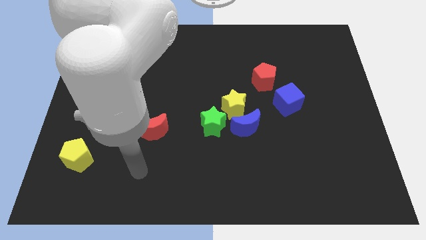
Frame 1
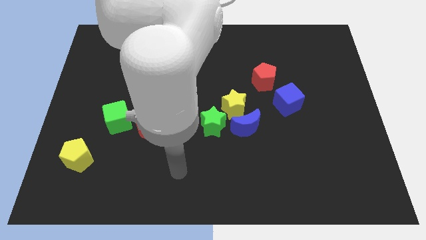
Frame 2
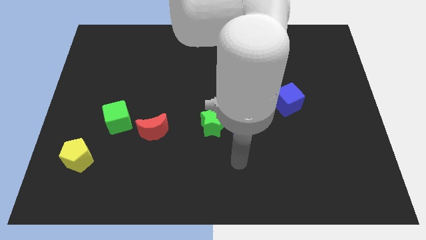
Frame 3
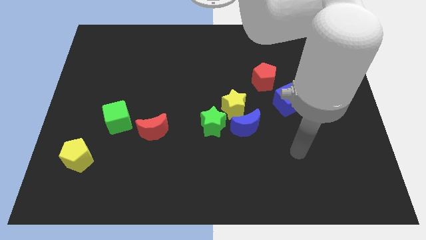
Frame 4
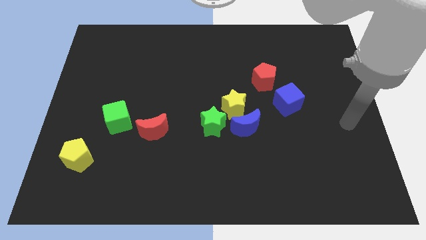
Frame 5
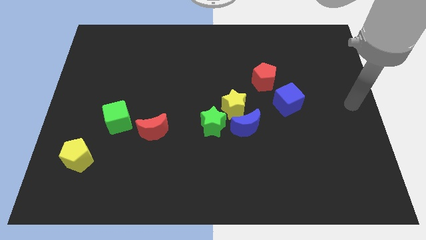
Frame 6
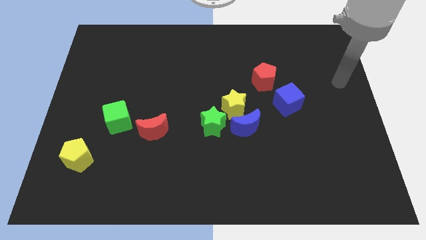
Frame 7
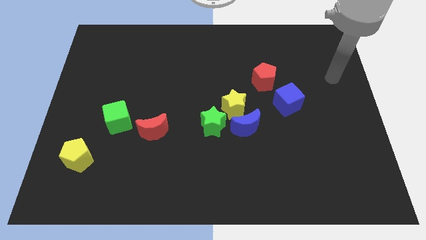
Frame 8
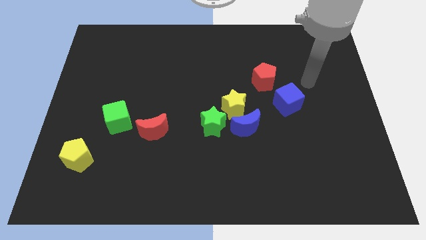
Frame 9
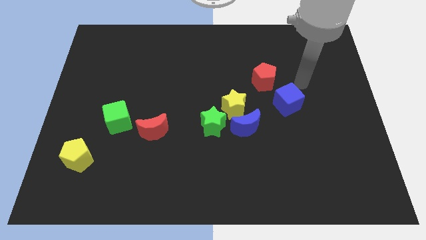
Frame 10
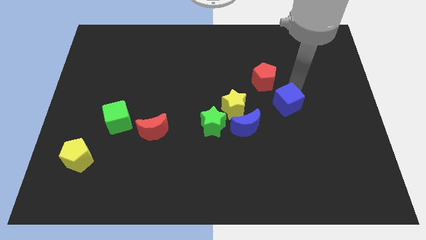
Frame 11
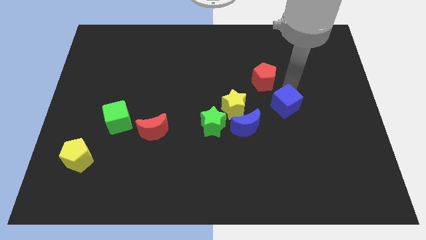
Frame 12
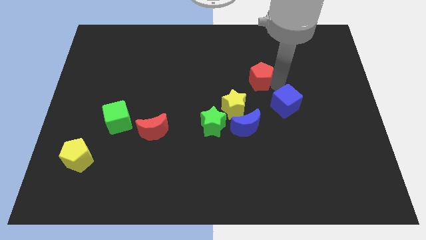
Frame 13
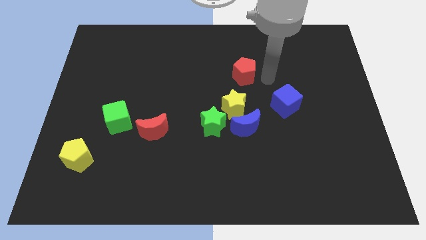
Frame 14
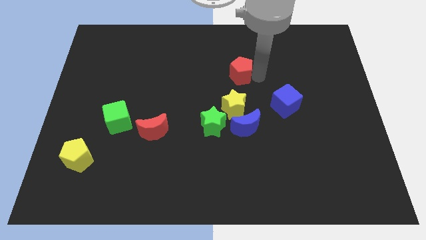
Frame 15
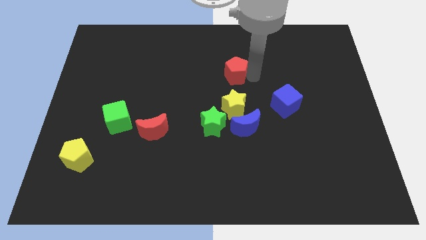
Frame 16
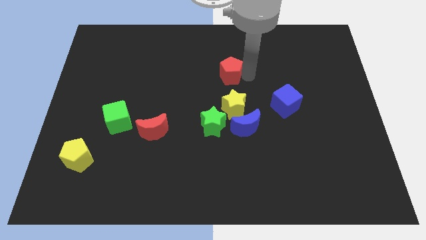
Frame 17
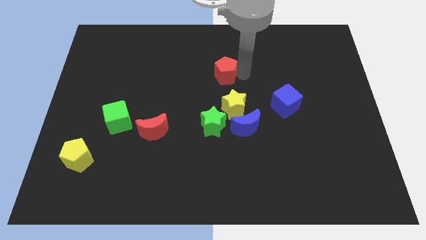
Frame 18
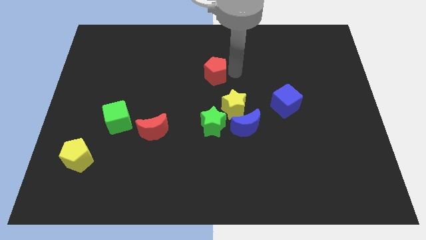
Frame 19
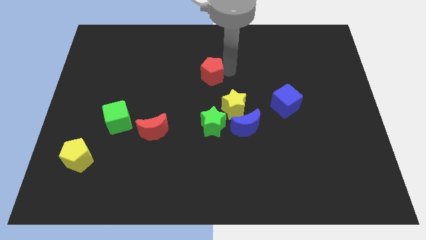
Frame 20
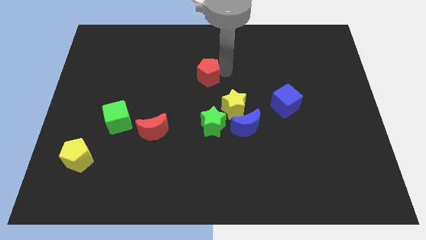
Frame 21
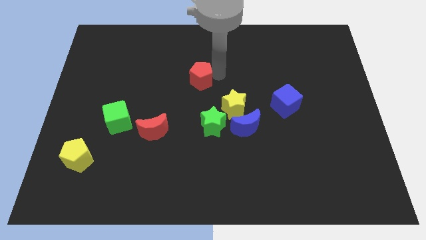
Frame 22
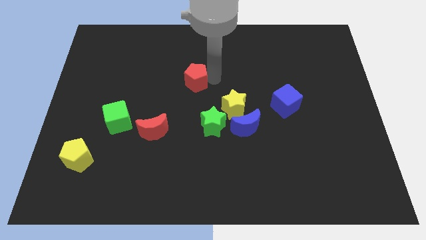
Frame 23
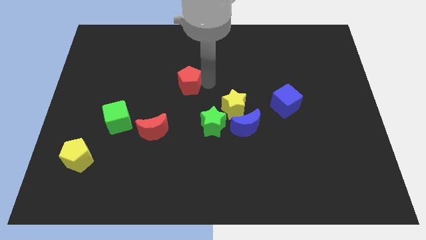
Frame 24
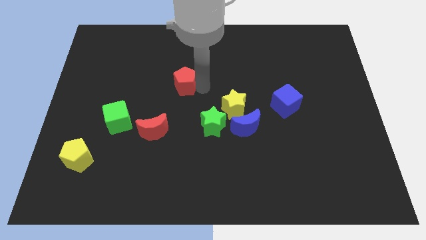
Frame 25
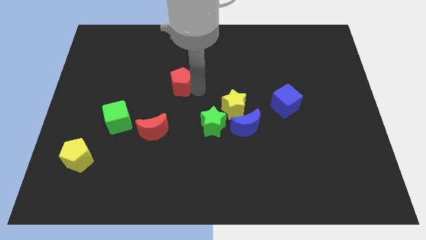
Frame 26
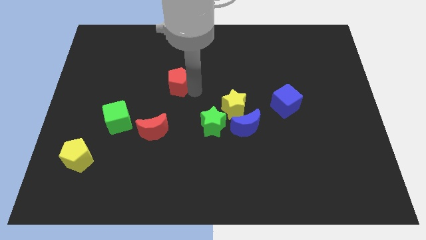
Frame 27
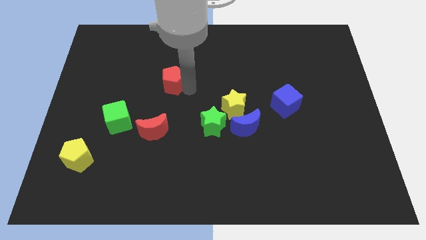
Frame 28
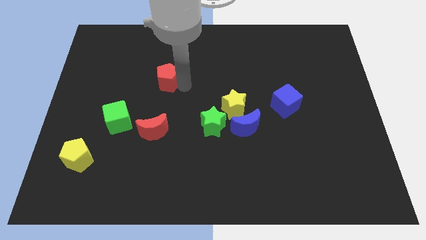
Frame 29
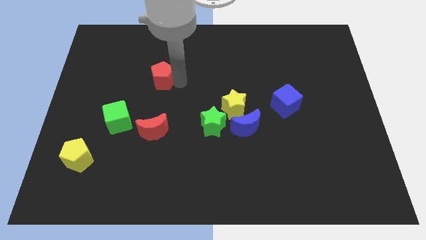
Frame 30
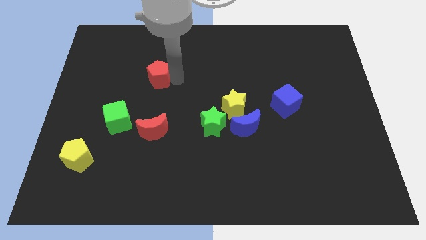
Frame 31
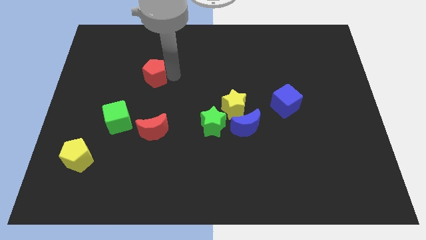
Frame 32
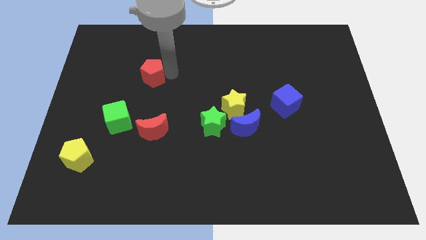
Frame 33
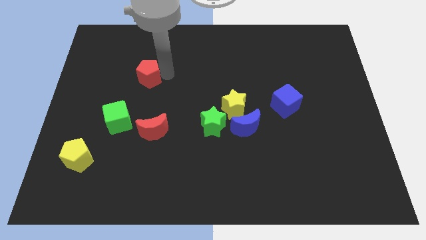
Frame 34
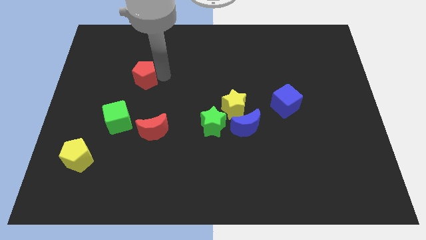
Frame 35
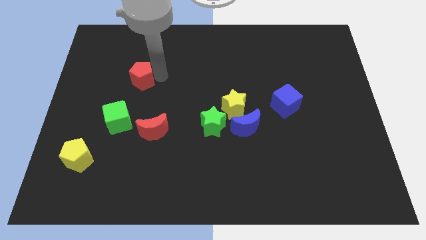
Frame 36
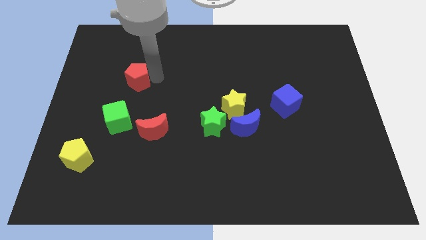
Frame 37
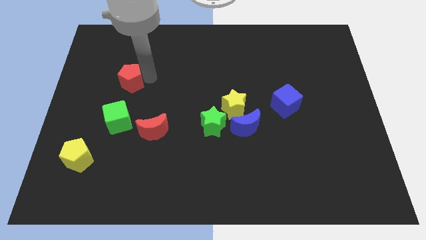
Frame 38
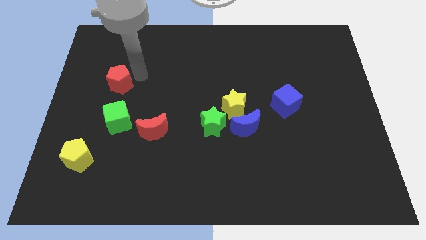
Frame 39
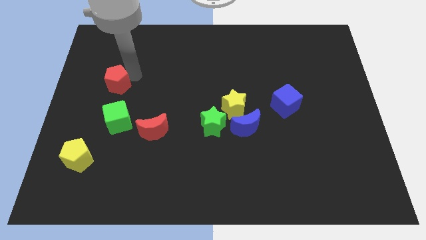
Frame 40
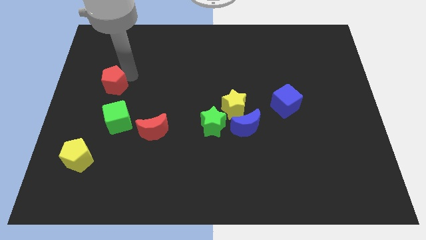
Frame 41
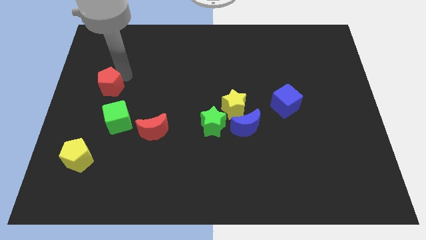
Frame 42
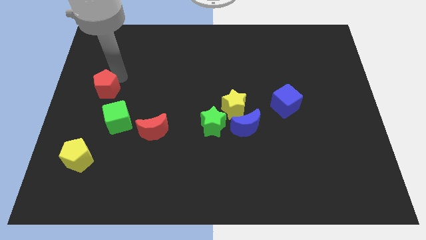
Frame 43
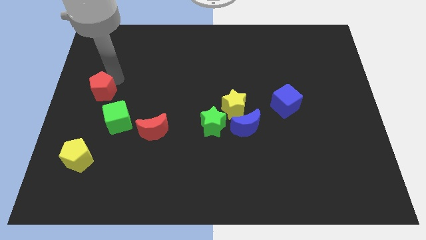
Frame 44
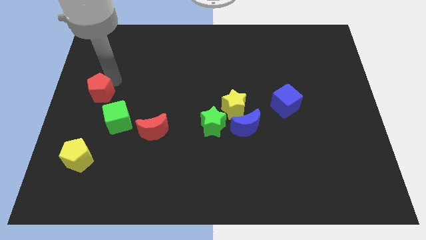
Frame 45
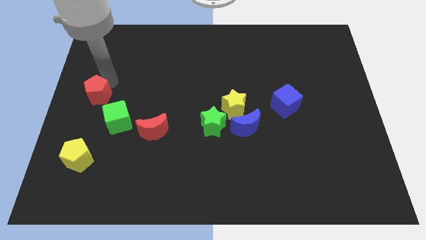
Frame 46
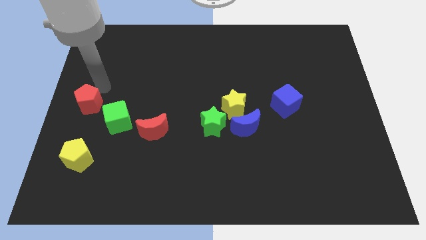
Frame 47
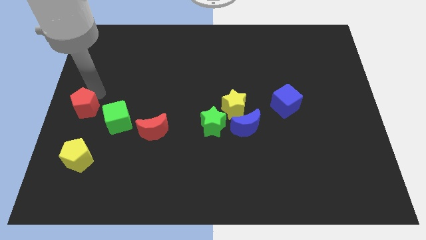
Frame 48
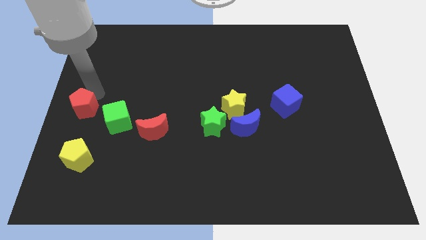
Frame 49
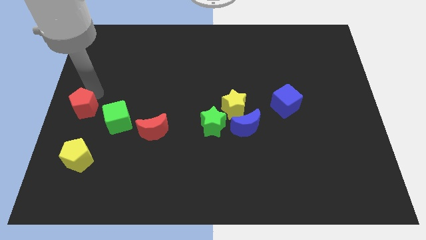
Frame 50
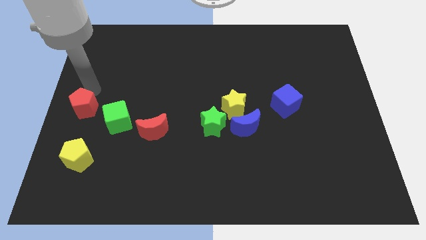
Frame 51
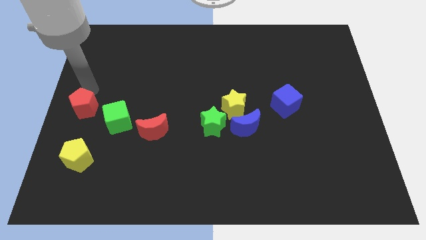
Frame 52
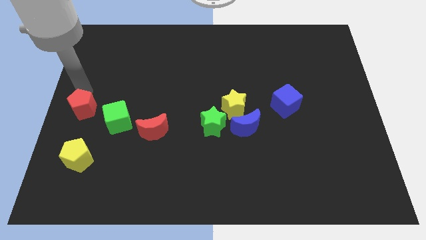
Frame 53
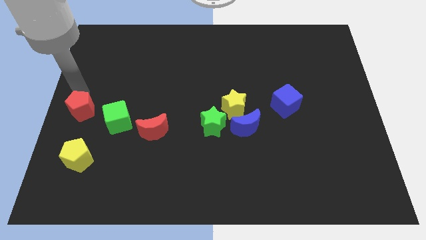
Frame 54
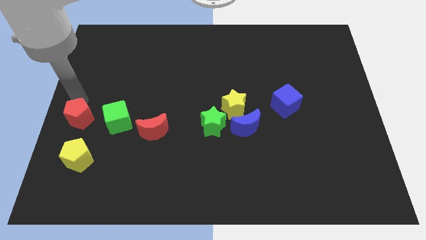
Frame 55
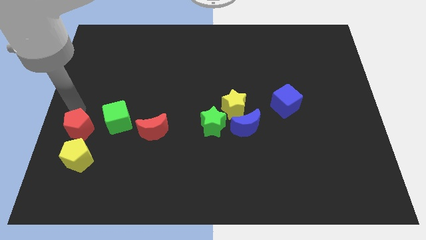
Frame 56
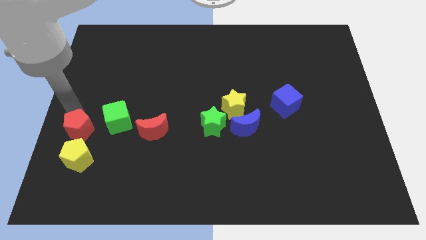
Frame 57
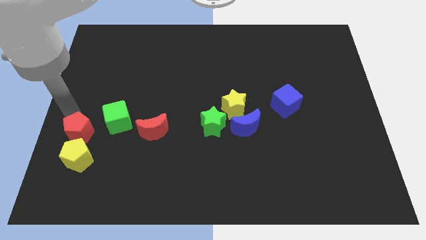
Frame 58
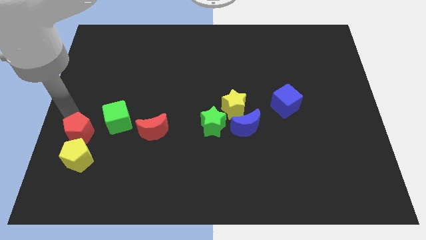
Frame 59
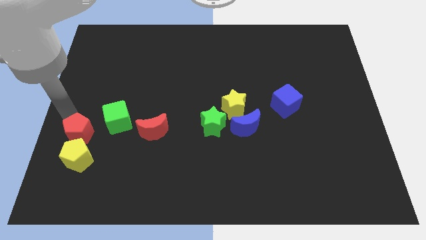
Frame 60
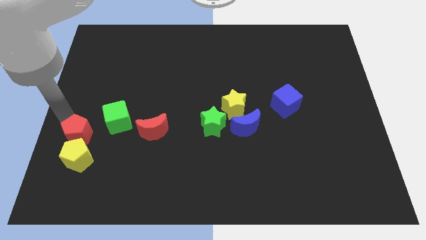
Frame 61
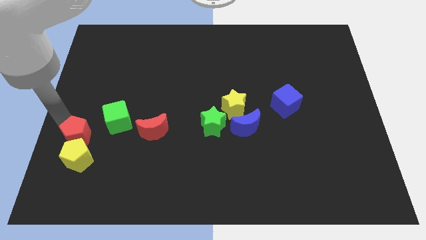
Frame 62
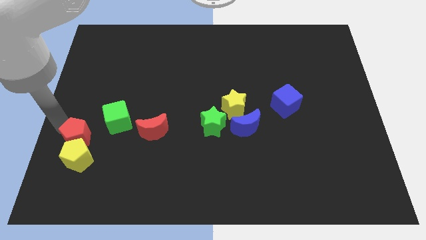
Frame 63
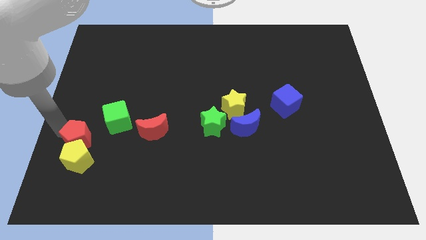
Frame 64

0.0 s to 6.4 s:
move the red pentagon close to the yellow pentagon

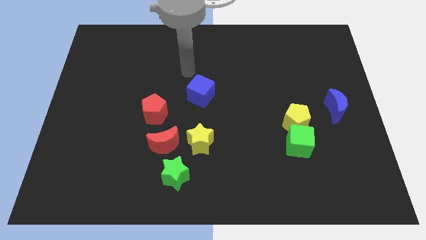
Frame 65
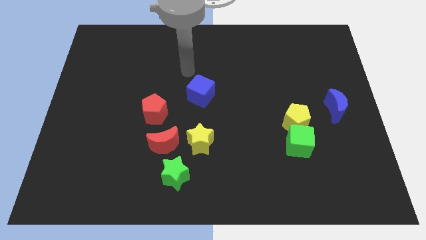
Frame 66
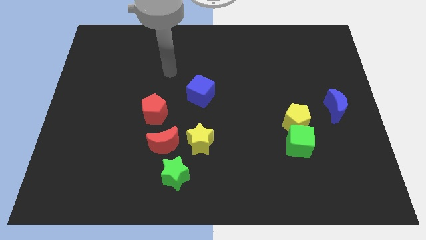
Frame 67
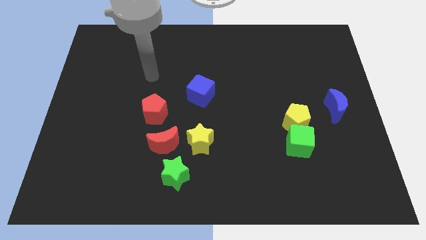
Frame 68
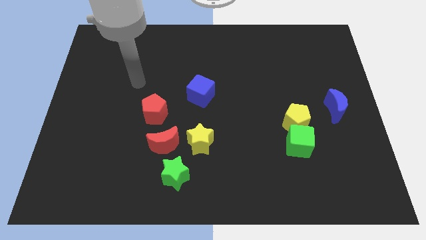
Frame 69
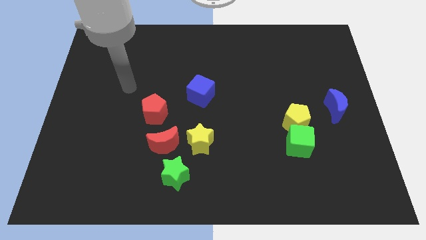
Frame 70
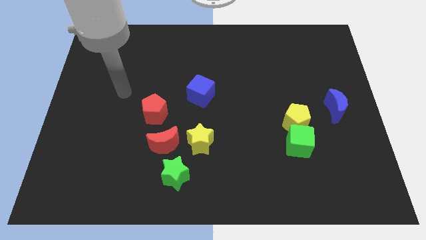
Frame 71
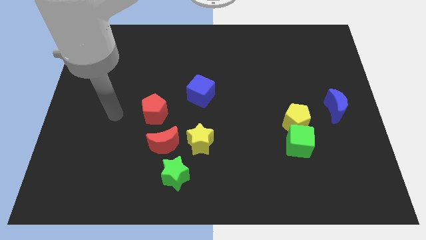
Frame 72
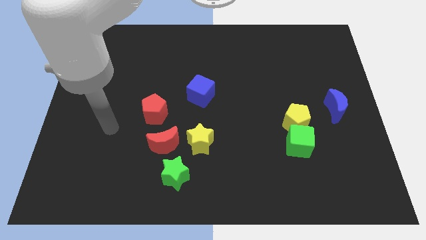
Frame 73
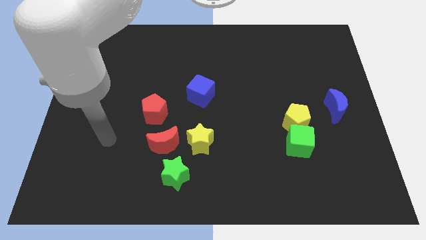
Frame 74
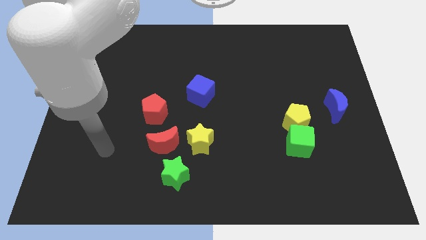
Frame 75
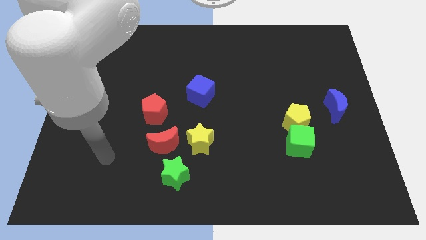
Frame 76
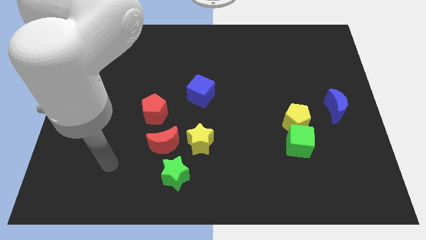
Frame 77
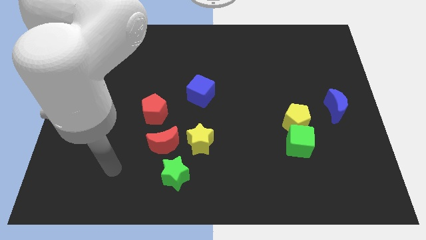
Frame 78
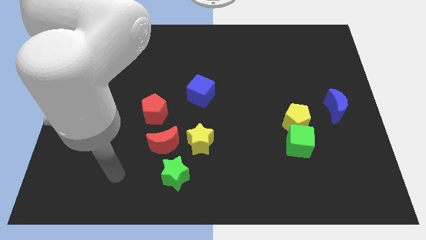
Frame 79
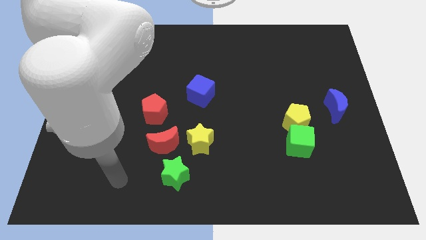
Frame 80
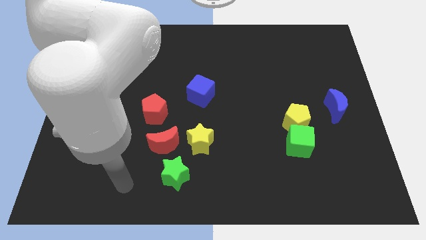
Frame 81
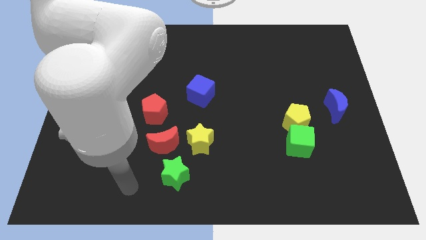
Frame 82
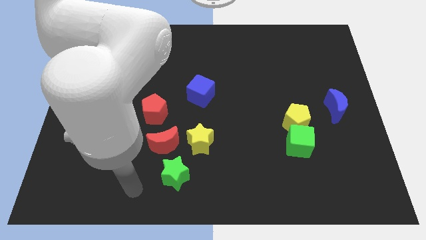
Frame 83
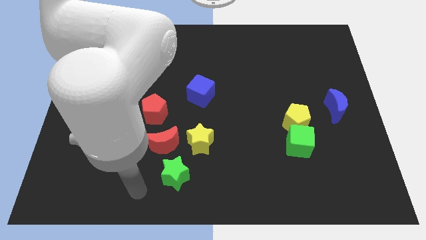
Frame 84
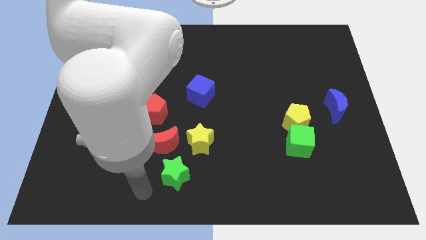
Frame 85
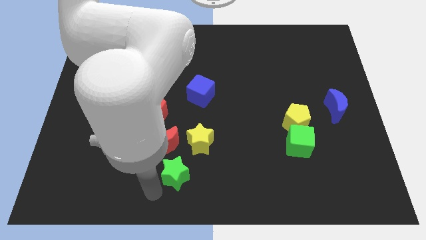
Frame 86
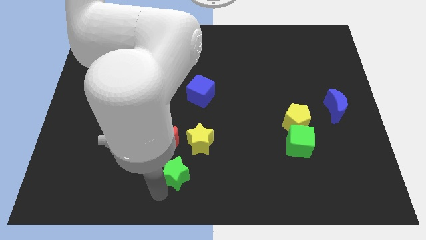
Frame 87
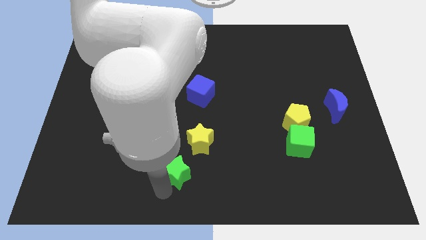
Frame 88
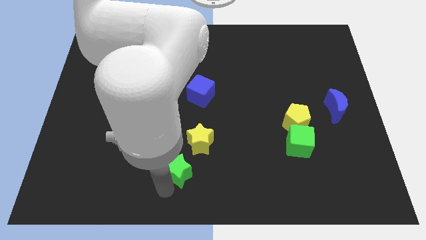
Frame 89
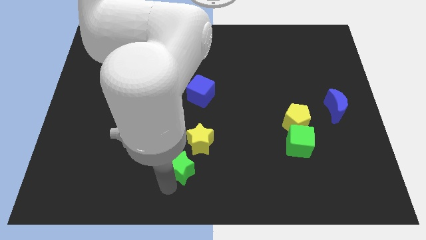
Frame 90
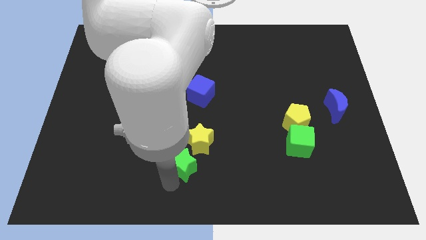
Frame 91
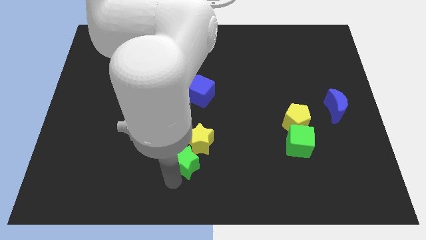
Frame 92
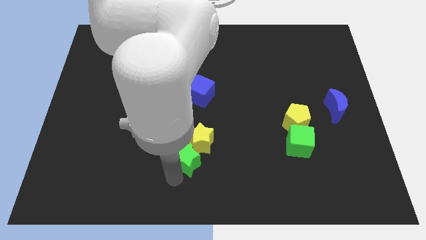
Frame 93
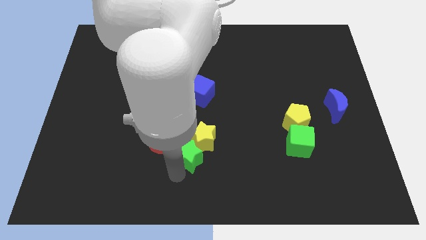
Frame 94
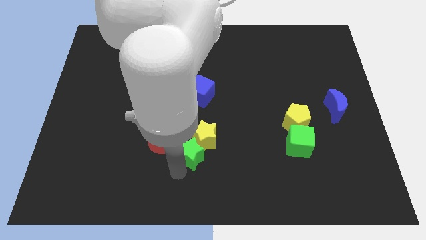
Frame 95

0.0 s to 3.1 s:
put the green star close to the yellow star
